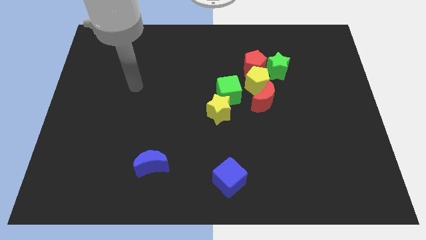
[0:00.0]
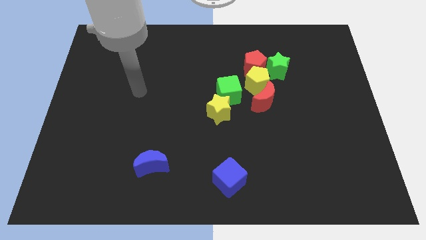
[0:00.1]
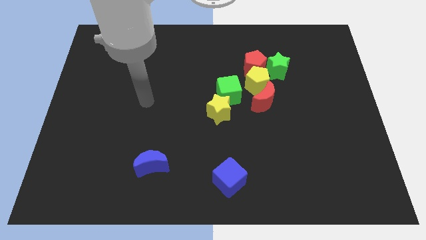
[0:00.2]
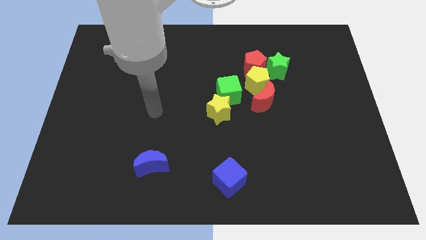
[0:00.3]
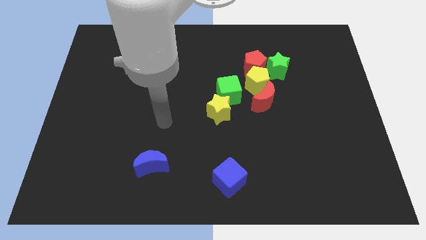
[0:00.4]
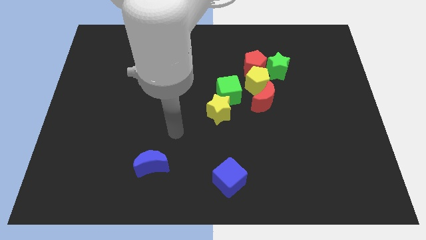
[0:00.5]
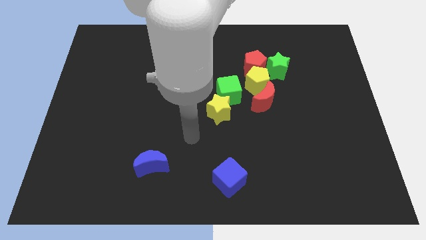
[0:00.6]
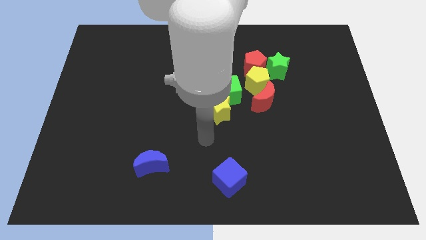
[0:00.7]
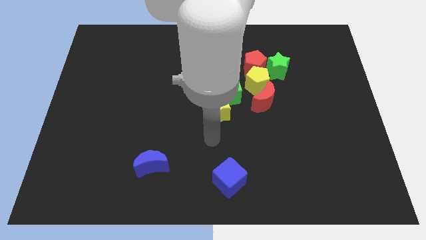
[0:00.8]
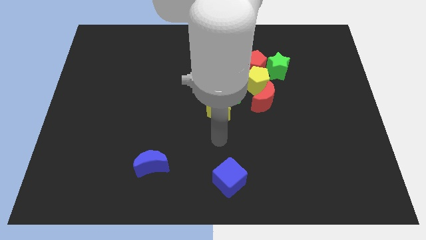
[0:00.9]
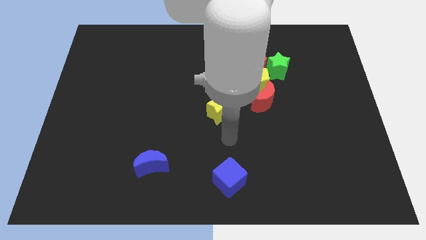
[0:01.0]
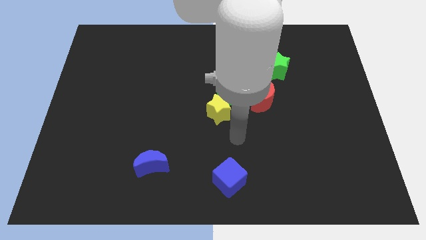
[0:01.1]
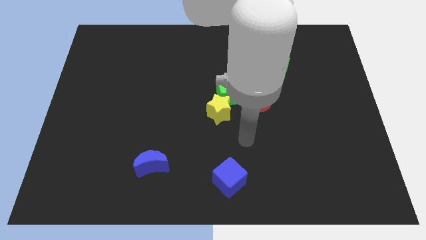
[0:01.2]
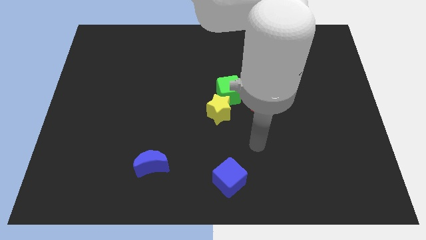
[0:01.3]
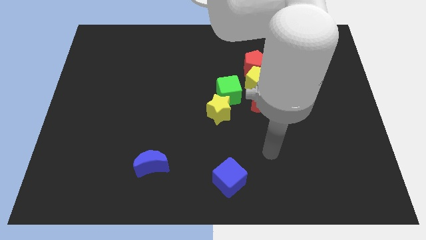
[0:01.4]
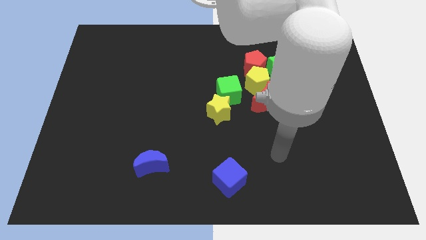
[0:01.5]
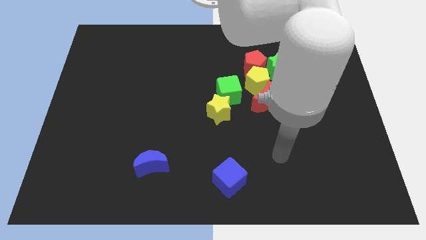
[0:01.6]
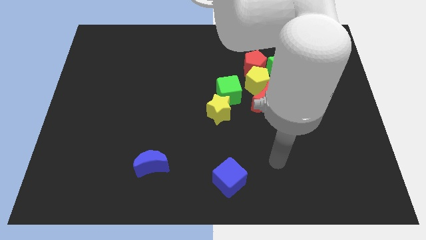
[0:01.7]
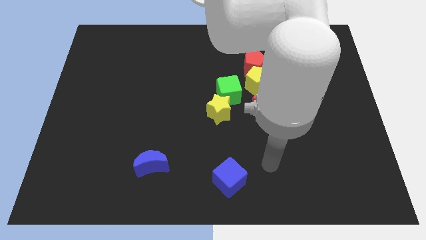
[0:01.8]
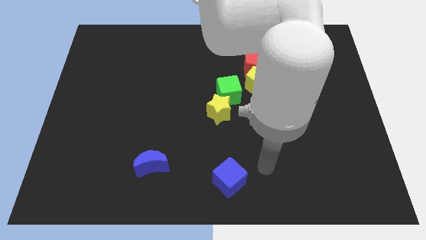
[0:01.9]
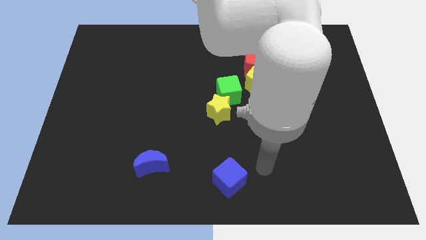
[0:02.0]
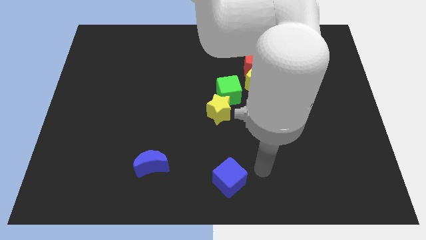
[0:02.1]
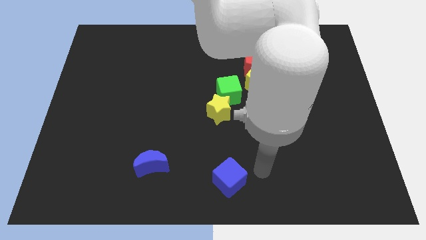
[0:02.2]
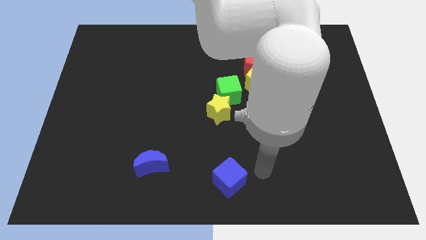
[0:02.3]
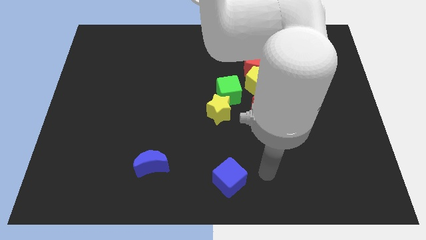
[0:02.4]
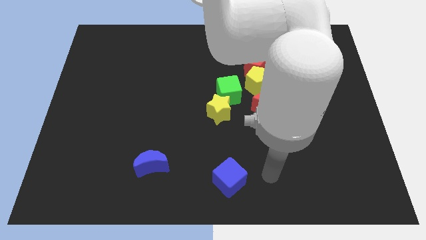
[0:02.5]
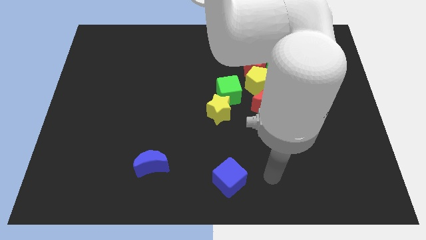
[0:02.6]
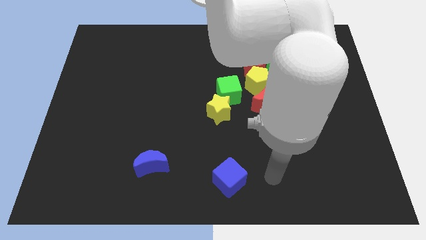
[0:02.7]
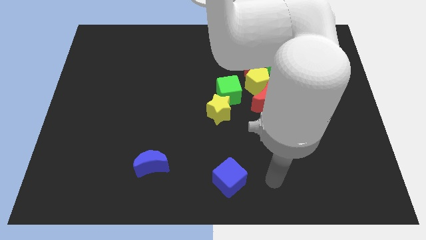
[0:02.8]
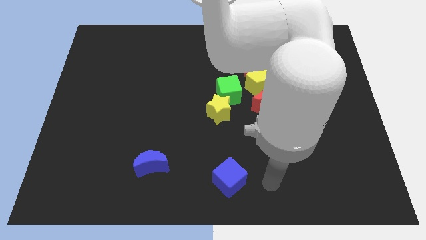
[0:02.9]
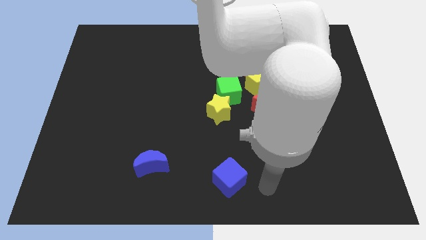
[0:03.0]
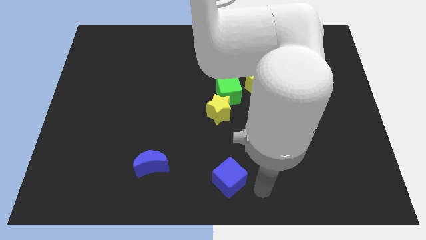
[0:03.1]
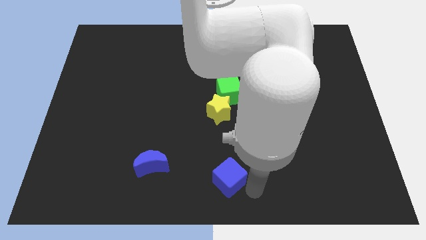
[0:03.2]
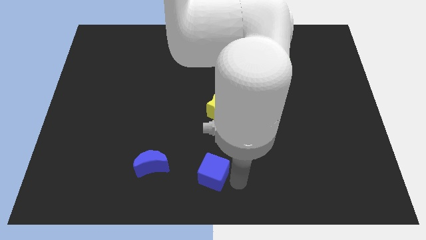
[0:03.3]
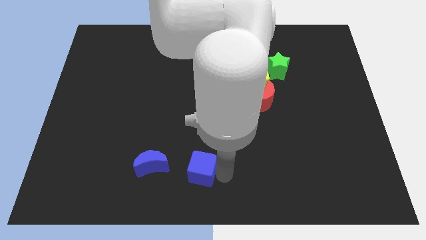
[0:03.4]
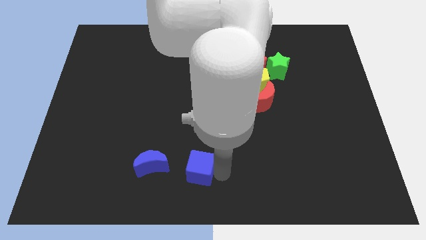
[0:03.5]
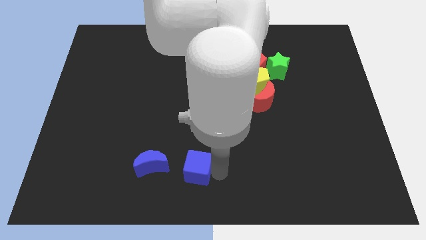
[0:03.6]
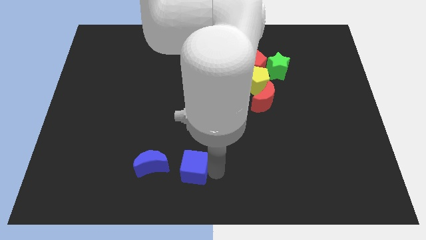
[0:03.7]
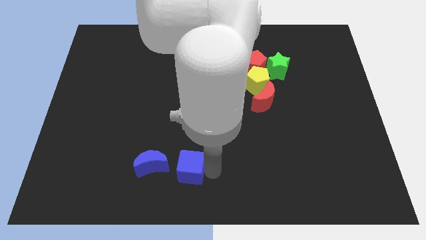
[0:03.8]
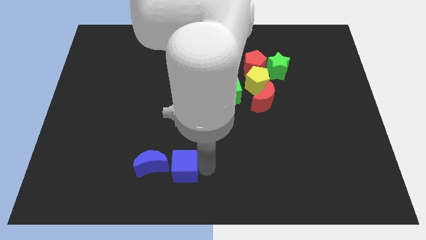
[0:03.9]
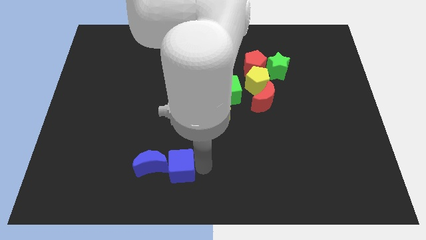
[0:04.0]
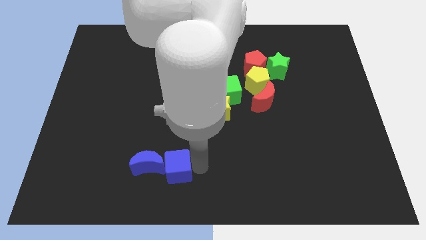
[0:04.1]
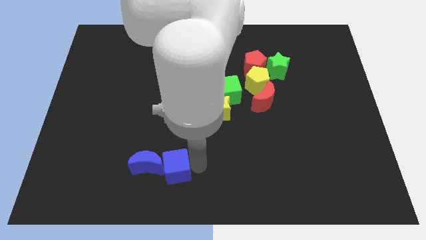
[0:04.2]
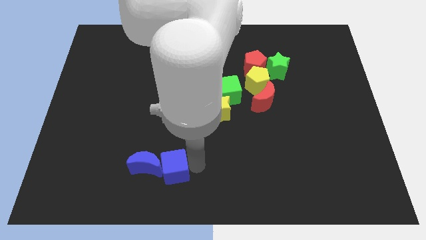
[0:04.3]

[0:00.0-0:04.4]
push the blue cube into the blue moon

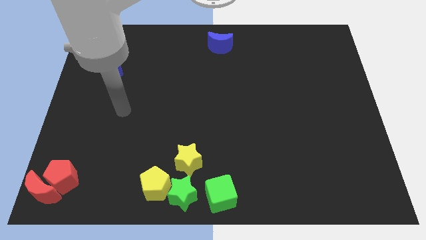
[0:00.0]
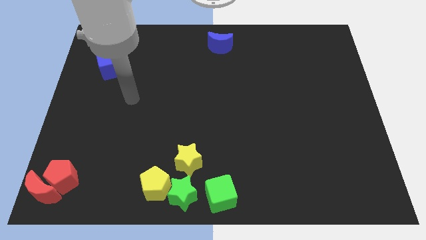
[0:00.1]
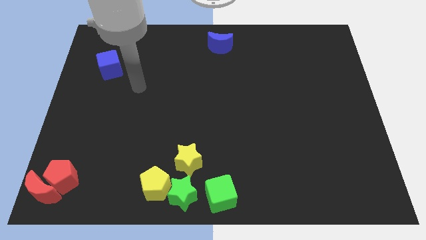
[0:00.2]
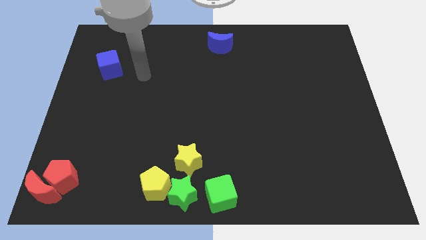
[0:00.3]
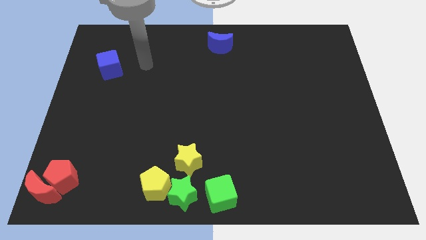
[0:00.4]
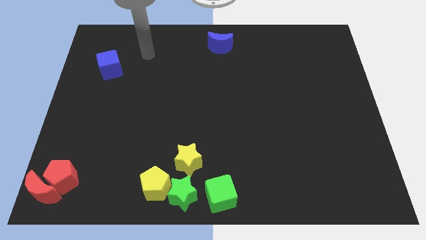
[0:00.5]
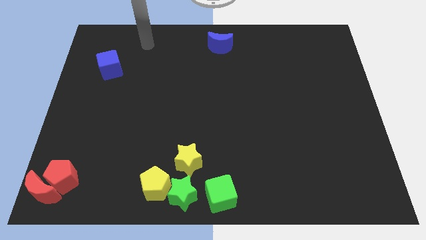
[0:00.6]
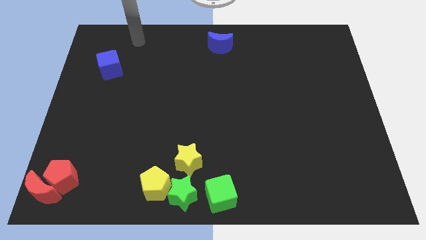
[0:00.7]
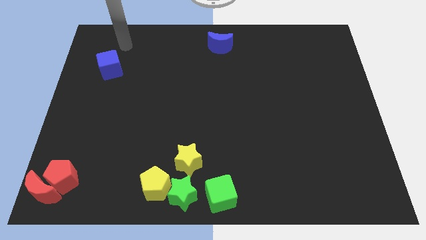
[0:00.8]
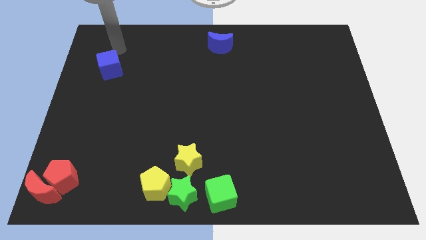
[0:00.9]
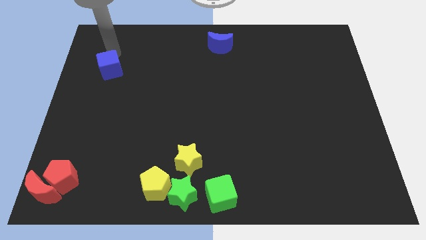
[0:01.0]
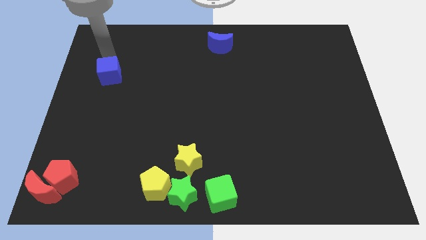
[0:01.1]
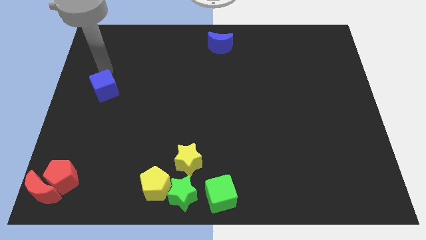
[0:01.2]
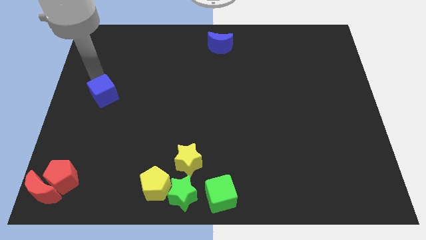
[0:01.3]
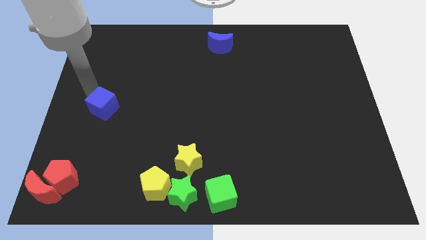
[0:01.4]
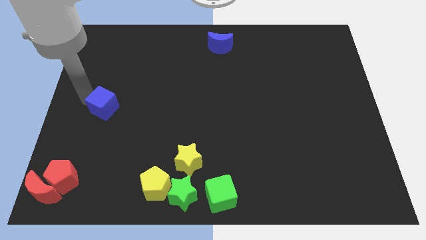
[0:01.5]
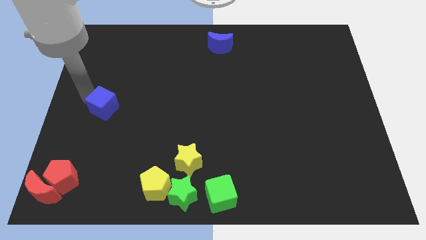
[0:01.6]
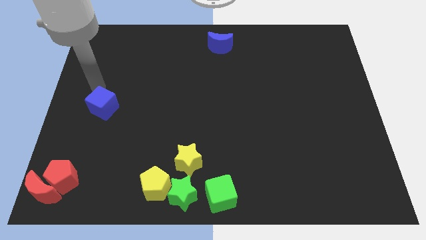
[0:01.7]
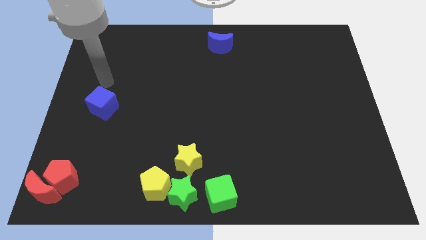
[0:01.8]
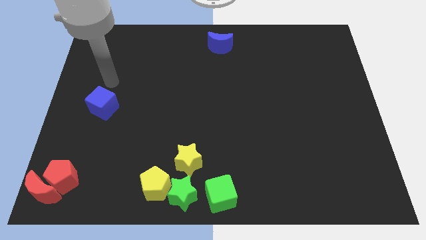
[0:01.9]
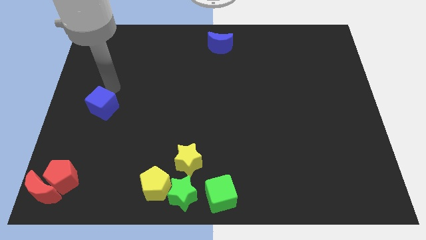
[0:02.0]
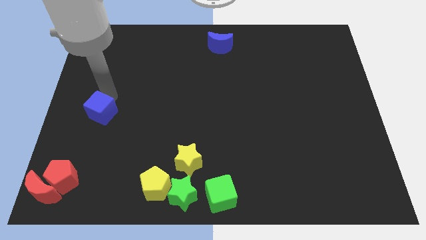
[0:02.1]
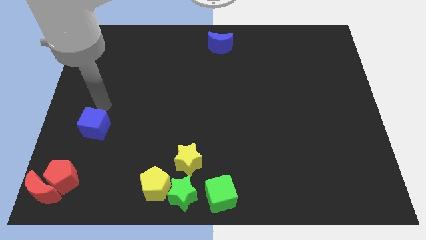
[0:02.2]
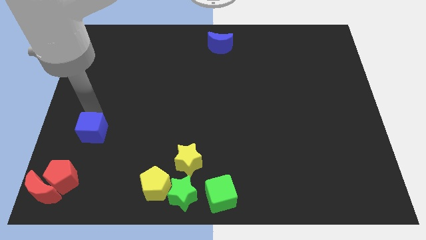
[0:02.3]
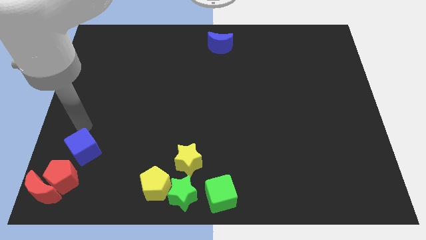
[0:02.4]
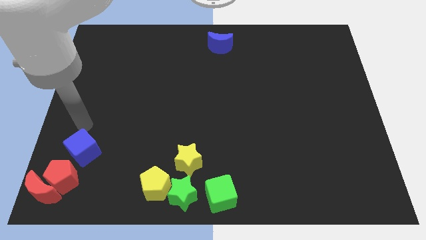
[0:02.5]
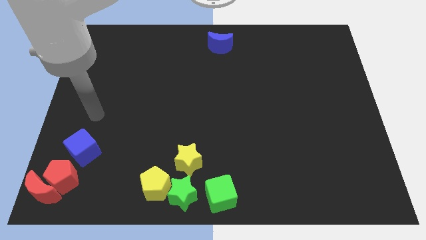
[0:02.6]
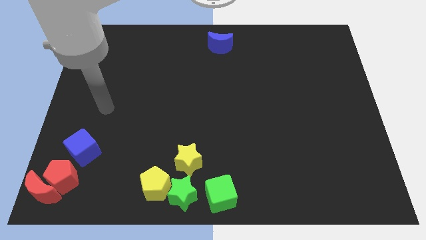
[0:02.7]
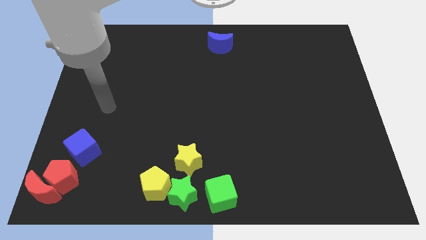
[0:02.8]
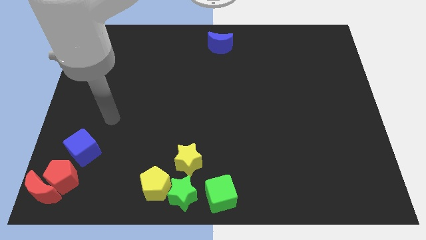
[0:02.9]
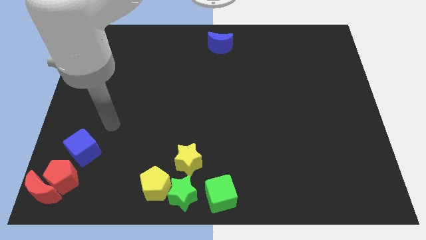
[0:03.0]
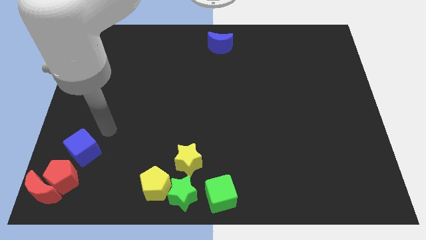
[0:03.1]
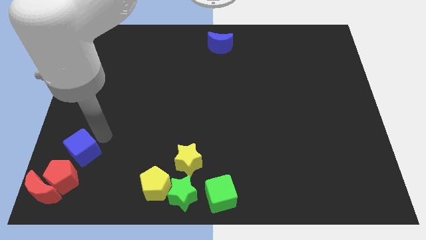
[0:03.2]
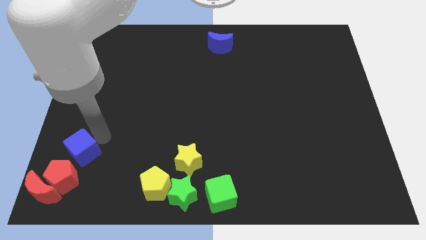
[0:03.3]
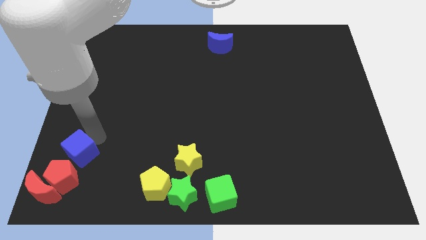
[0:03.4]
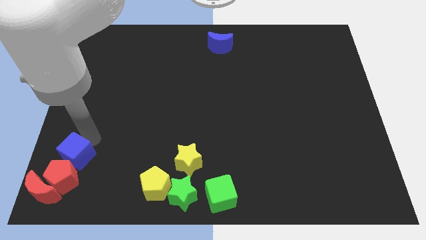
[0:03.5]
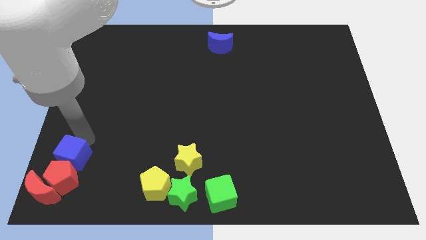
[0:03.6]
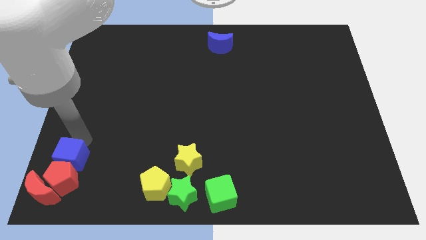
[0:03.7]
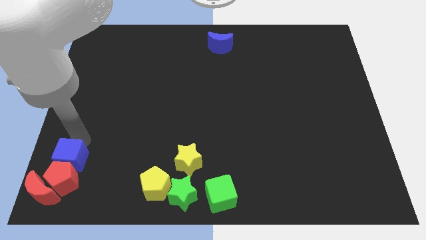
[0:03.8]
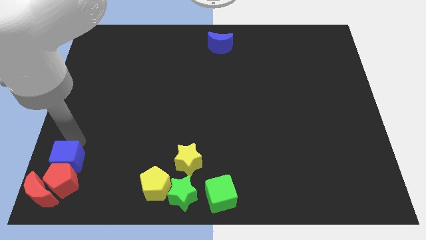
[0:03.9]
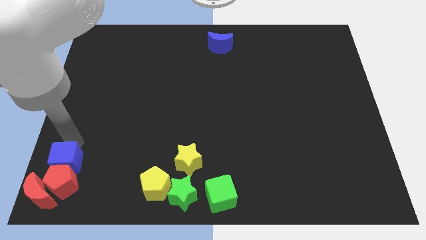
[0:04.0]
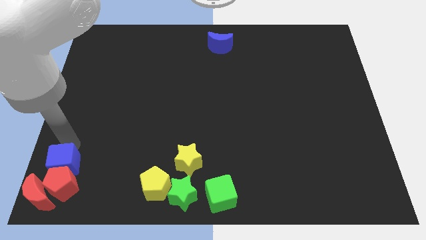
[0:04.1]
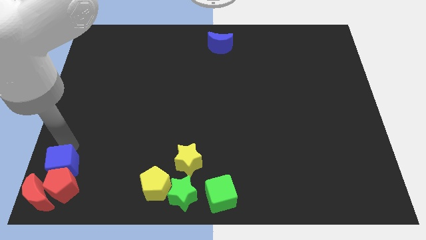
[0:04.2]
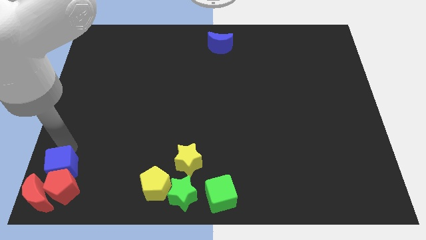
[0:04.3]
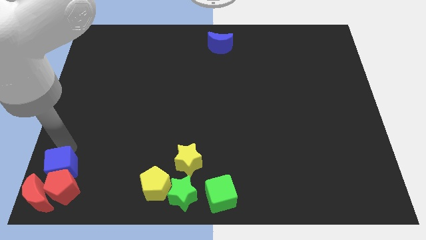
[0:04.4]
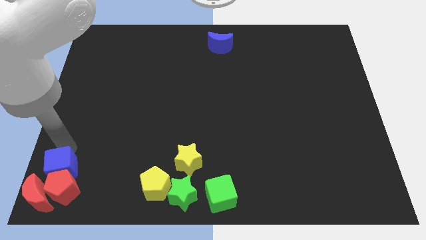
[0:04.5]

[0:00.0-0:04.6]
push the blue cube into the top side of the red pentagon
